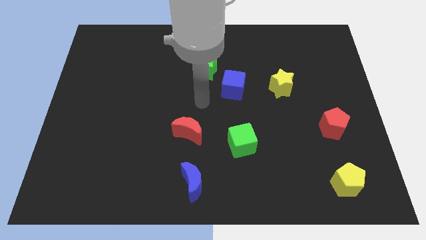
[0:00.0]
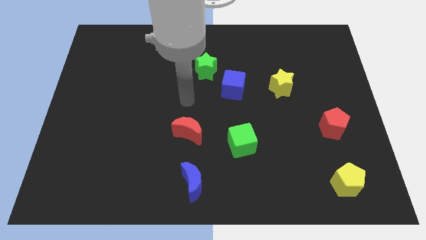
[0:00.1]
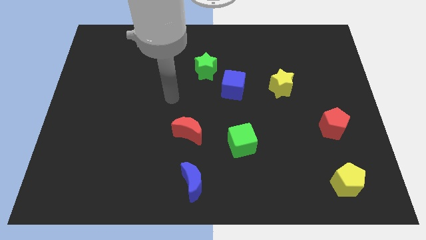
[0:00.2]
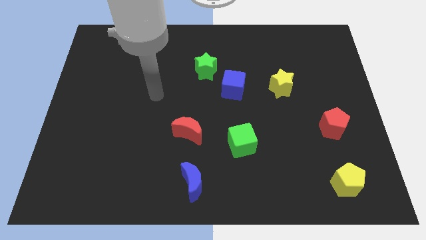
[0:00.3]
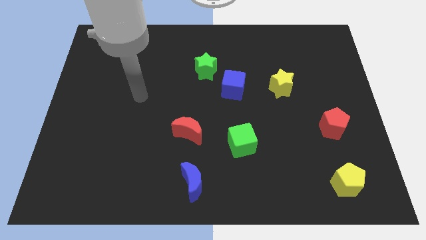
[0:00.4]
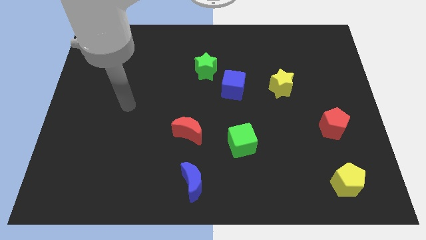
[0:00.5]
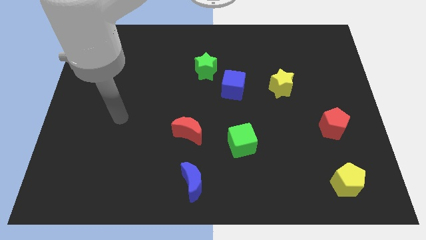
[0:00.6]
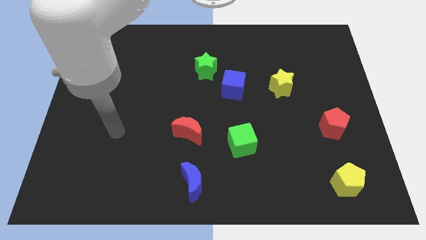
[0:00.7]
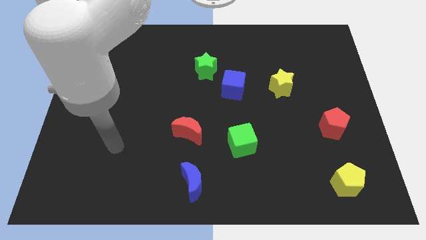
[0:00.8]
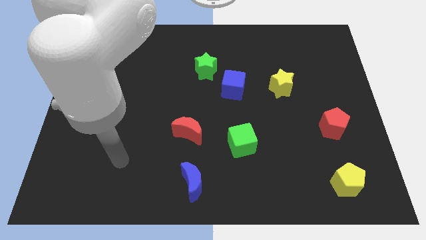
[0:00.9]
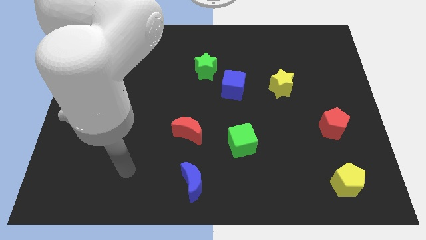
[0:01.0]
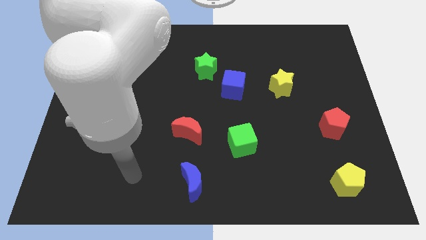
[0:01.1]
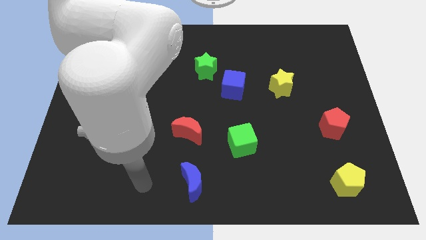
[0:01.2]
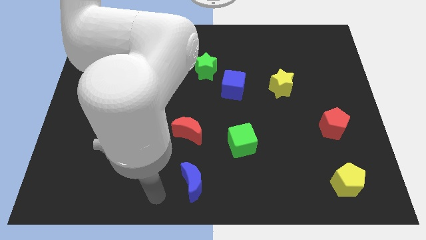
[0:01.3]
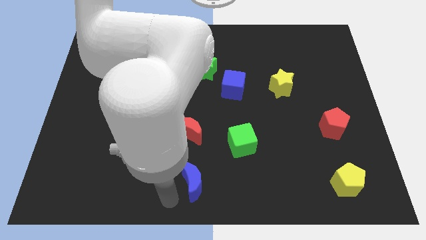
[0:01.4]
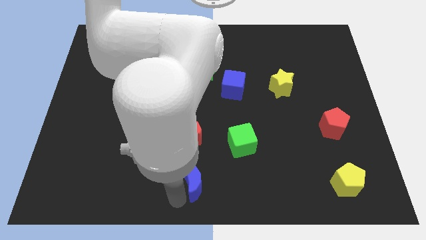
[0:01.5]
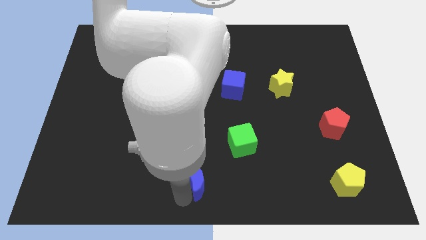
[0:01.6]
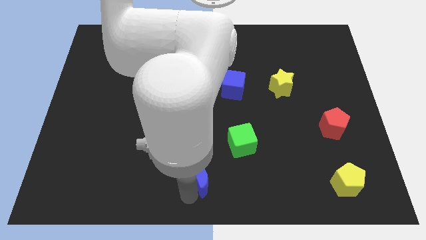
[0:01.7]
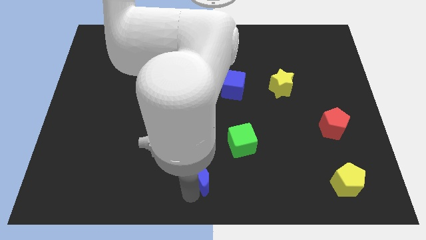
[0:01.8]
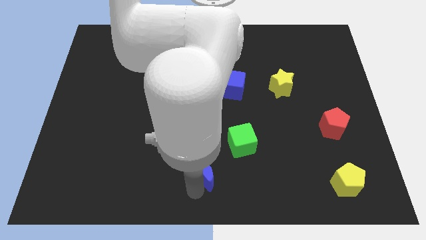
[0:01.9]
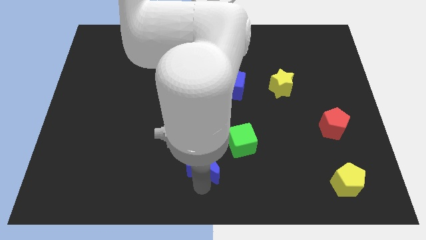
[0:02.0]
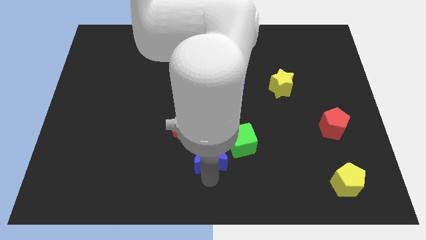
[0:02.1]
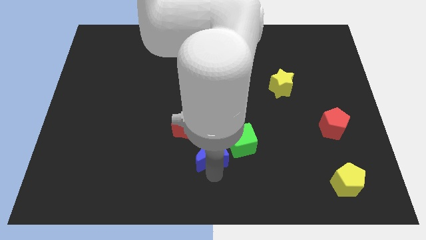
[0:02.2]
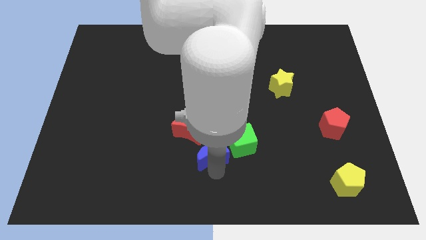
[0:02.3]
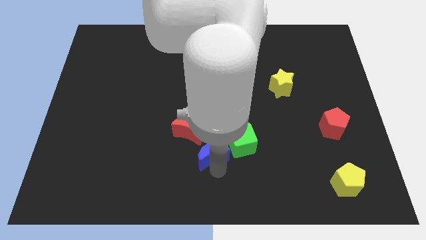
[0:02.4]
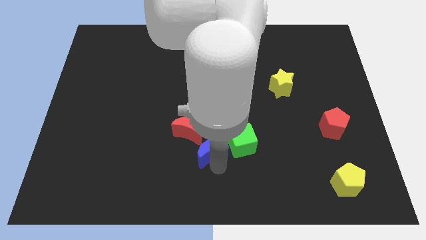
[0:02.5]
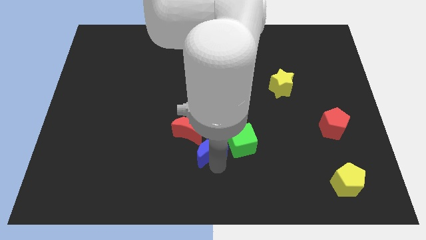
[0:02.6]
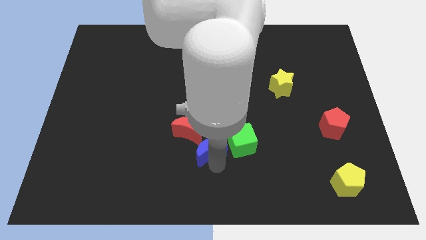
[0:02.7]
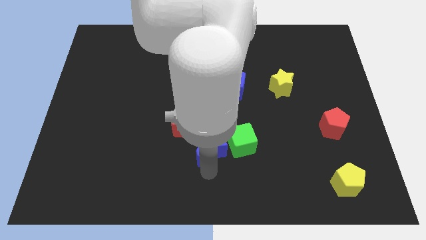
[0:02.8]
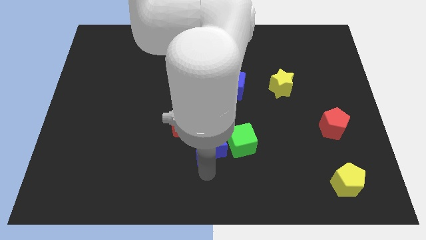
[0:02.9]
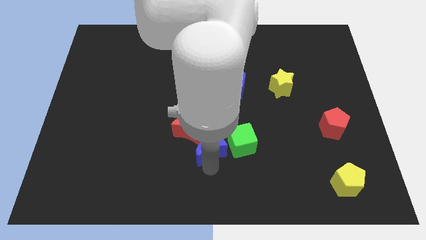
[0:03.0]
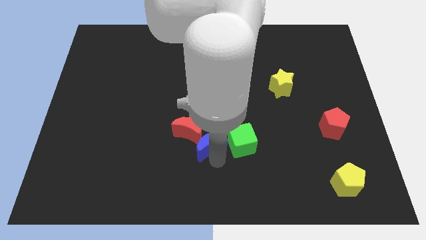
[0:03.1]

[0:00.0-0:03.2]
slide the blue crescent between the red crescent and green cube

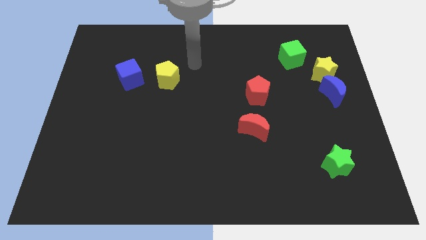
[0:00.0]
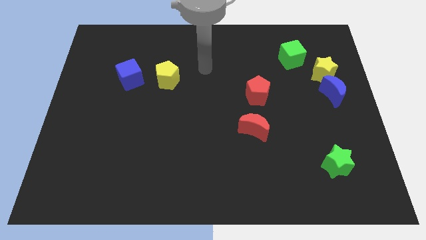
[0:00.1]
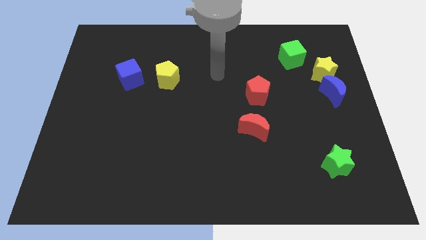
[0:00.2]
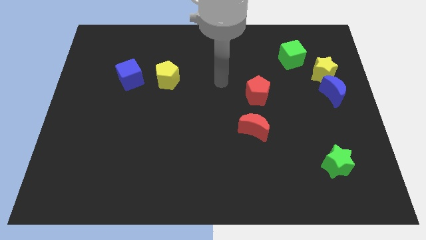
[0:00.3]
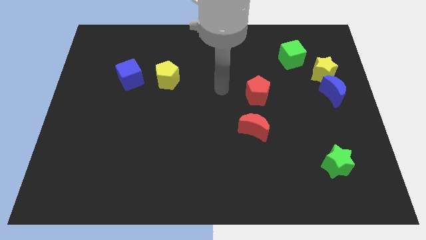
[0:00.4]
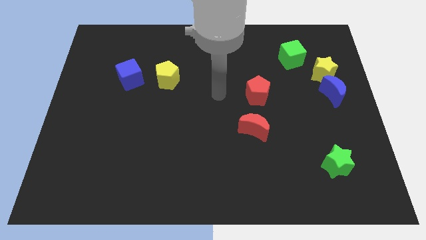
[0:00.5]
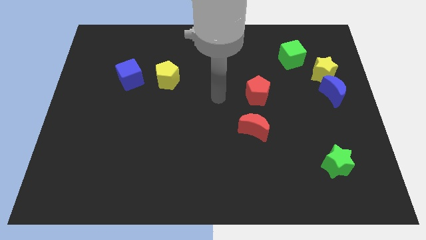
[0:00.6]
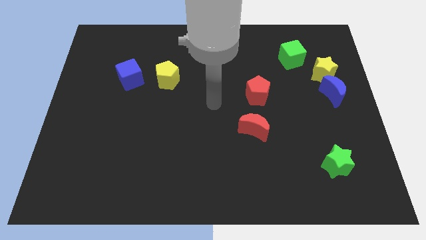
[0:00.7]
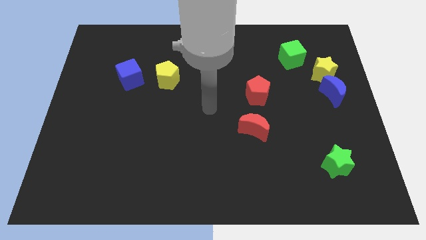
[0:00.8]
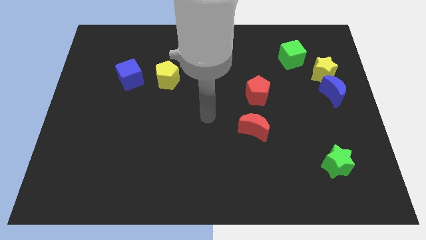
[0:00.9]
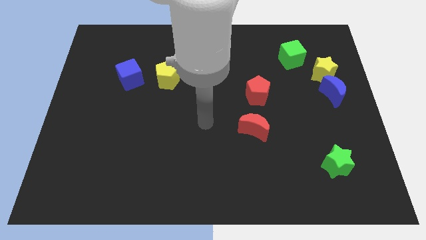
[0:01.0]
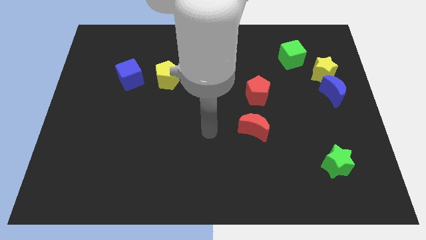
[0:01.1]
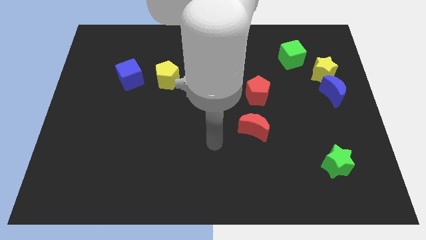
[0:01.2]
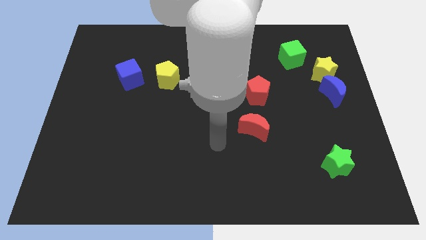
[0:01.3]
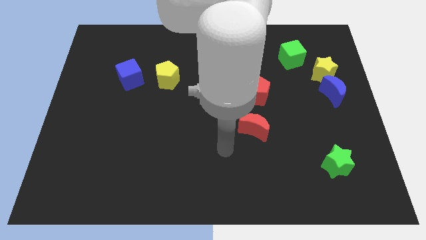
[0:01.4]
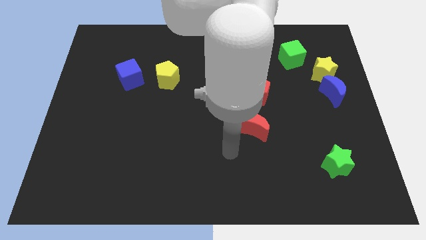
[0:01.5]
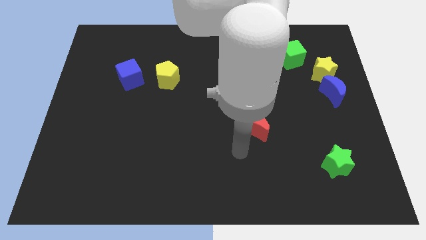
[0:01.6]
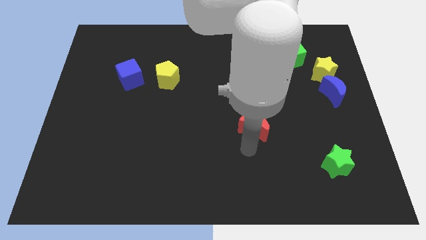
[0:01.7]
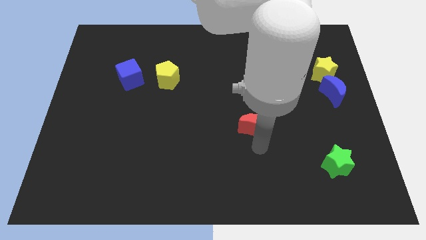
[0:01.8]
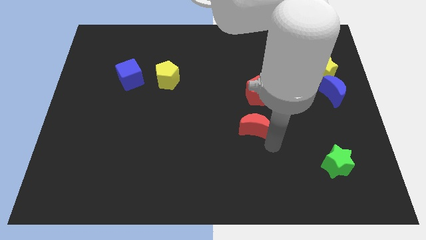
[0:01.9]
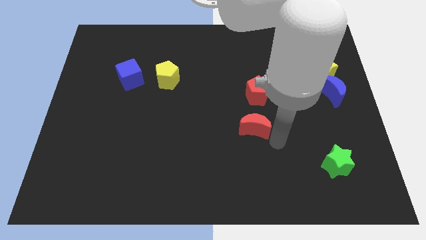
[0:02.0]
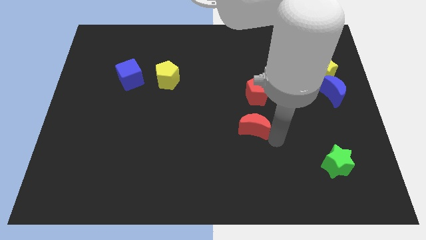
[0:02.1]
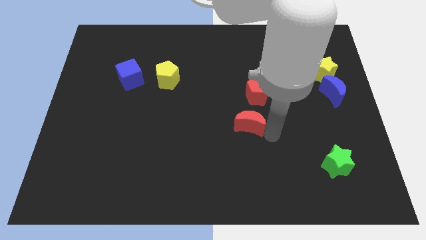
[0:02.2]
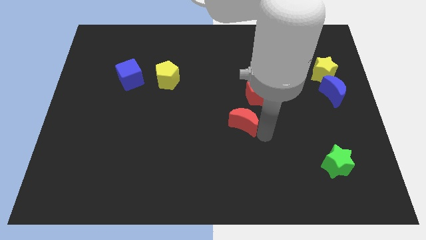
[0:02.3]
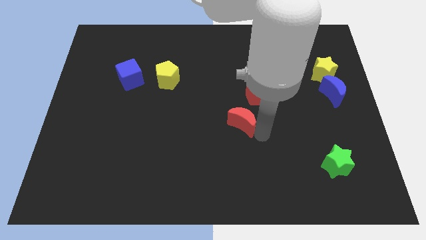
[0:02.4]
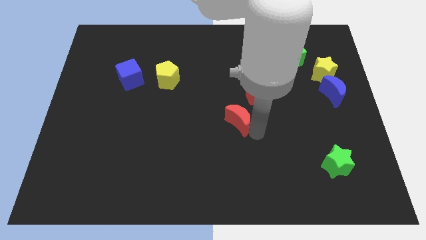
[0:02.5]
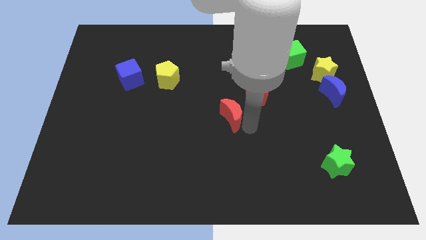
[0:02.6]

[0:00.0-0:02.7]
push the red moon up slightly

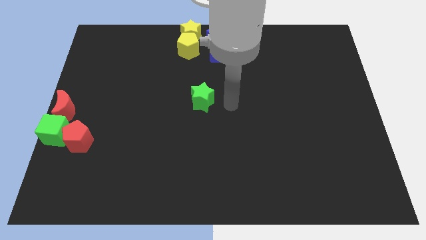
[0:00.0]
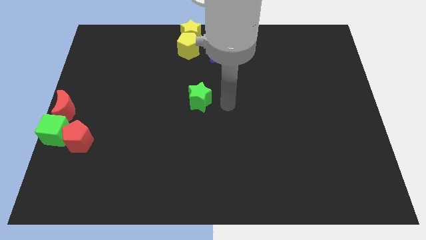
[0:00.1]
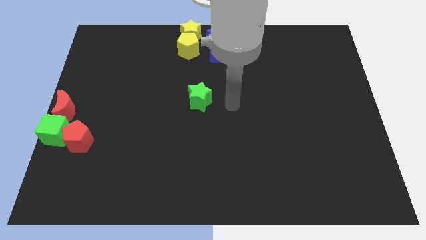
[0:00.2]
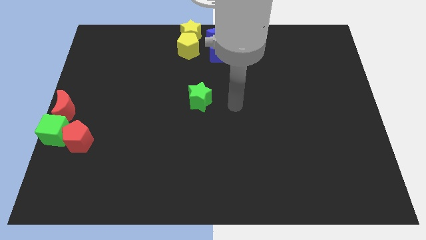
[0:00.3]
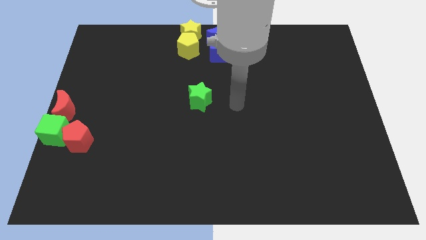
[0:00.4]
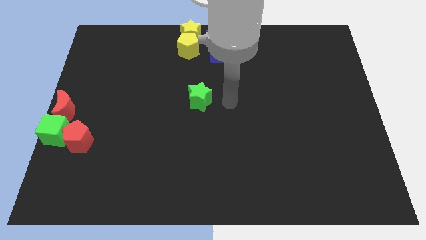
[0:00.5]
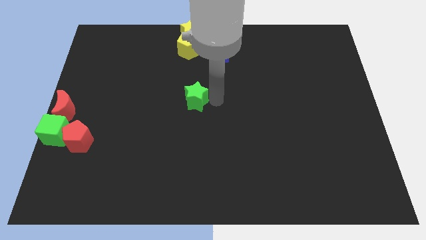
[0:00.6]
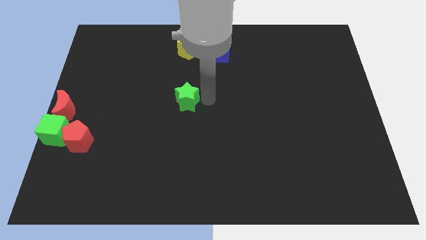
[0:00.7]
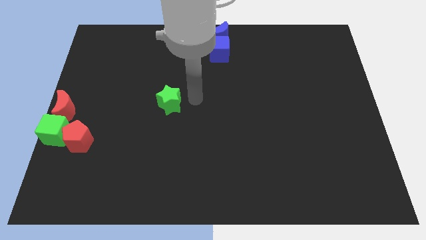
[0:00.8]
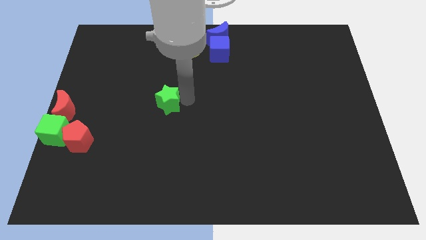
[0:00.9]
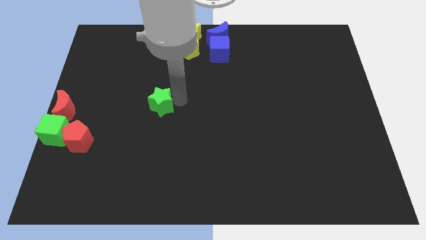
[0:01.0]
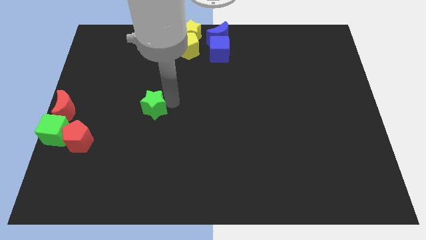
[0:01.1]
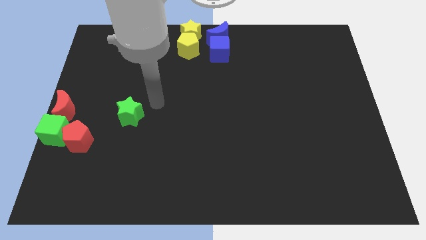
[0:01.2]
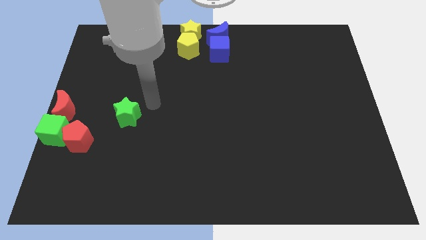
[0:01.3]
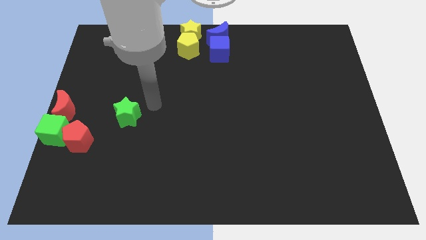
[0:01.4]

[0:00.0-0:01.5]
push the green star towards the red pentagon

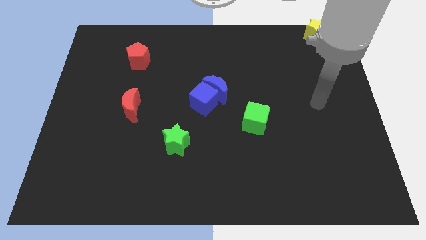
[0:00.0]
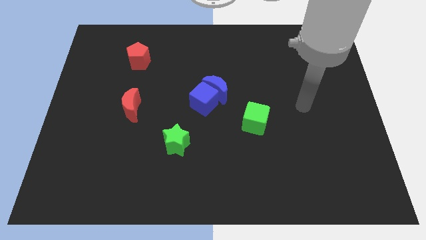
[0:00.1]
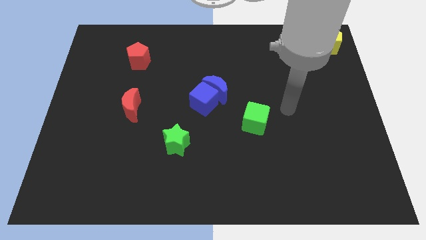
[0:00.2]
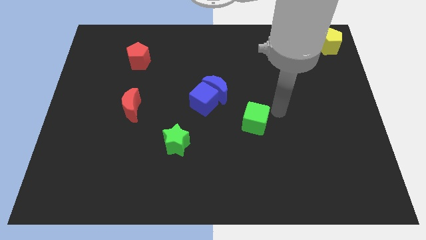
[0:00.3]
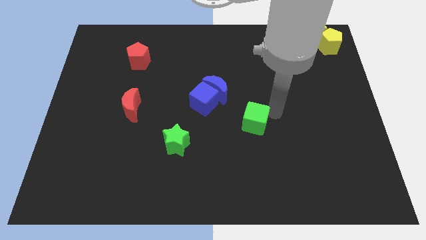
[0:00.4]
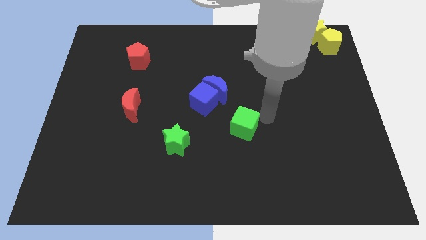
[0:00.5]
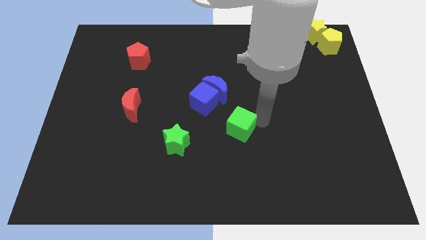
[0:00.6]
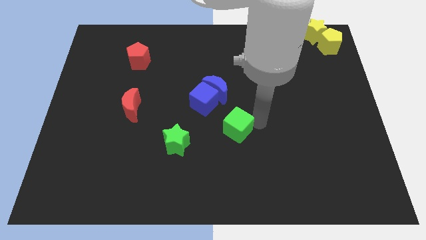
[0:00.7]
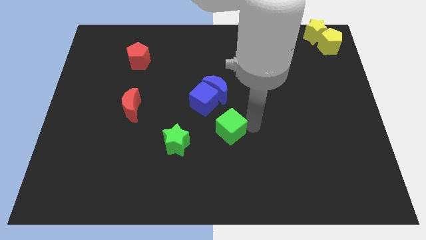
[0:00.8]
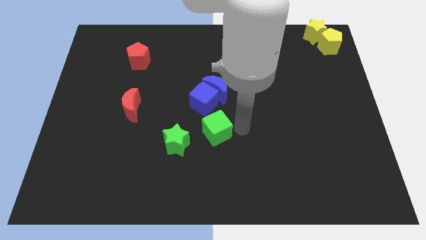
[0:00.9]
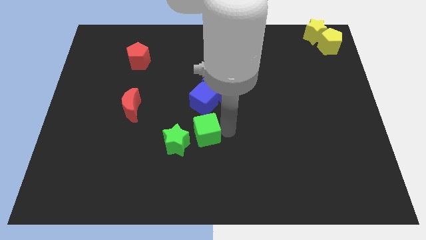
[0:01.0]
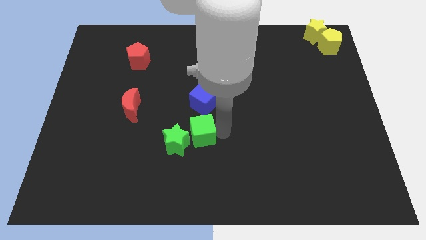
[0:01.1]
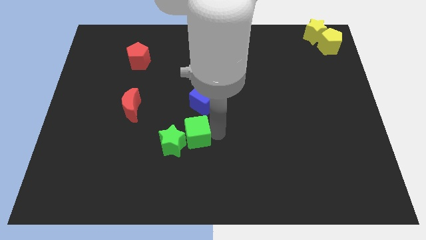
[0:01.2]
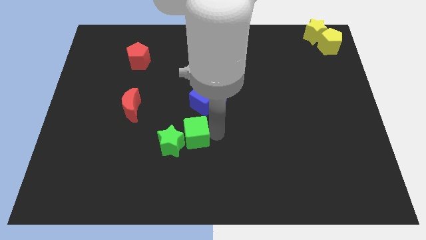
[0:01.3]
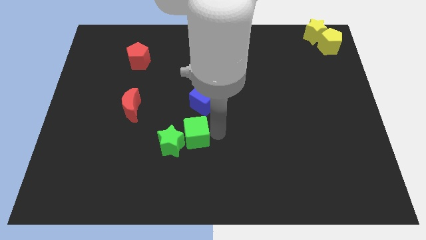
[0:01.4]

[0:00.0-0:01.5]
place the green cube to the right of the green star
